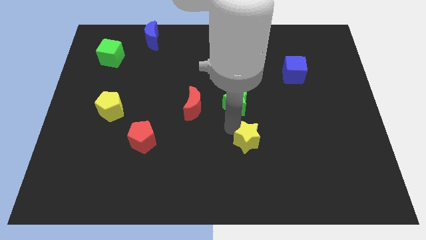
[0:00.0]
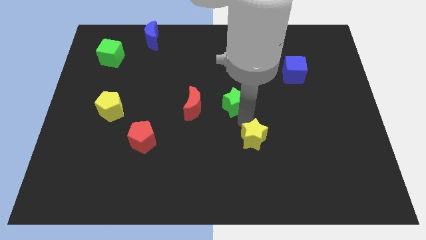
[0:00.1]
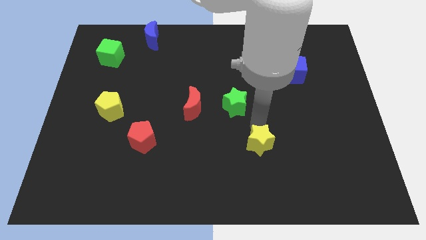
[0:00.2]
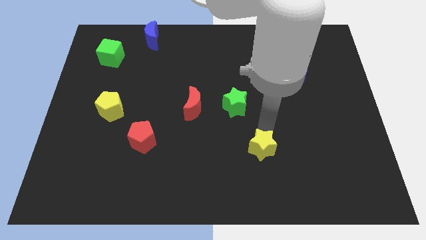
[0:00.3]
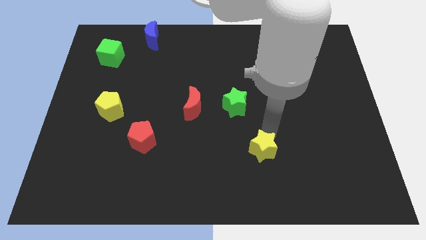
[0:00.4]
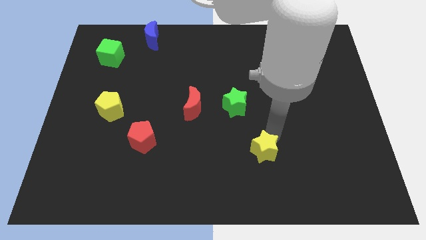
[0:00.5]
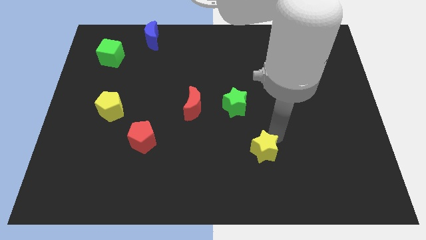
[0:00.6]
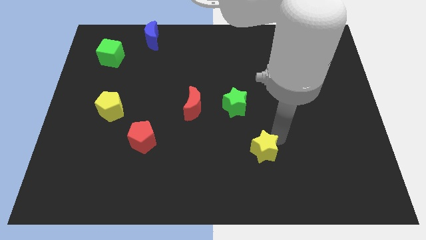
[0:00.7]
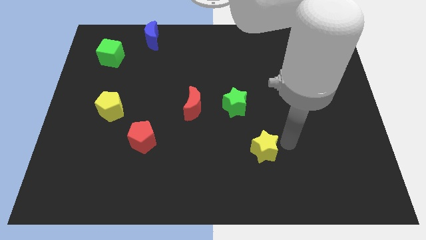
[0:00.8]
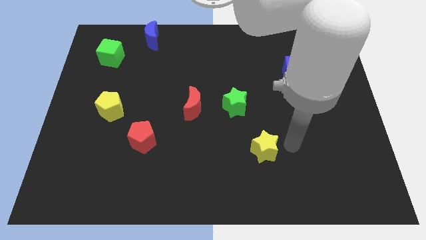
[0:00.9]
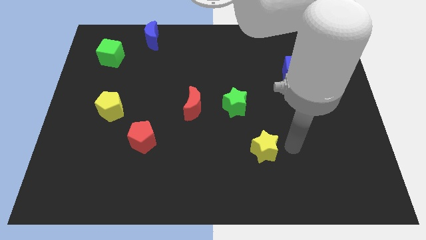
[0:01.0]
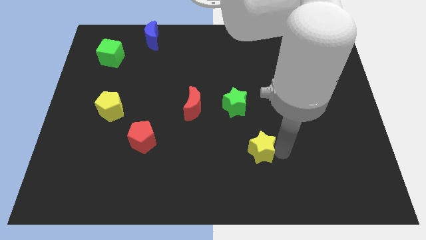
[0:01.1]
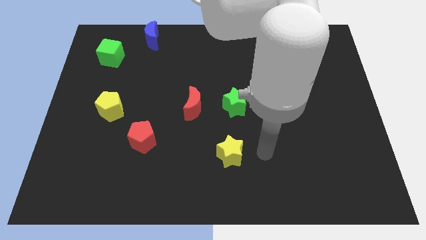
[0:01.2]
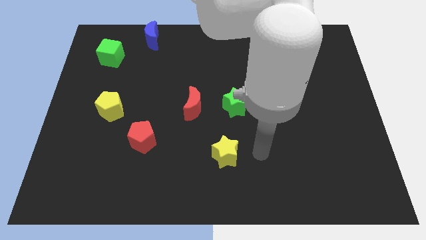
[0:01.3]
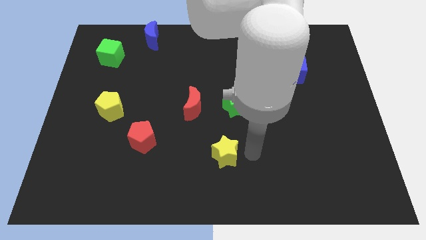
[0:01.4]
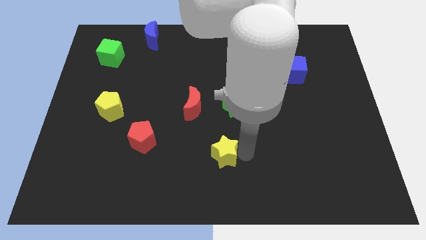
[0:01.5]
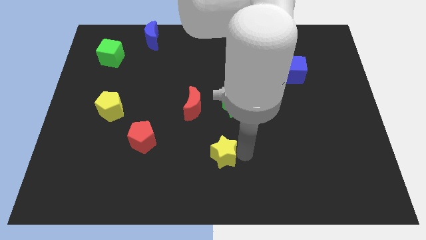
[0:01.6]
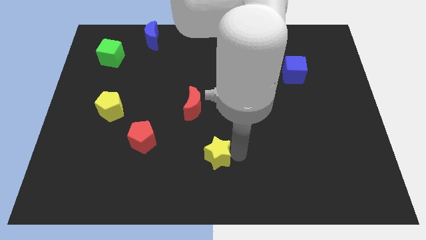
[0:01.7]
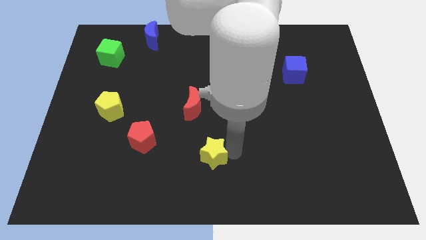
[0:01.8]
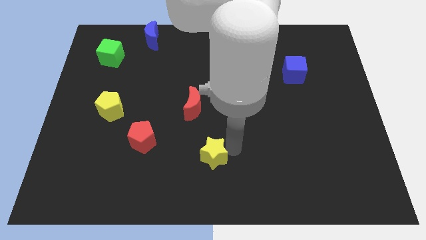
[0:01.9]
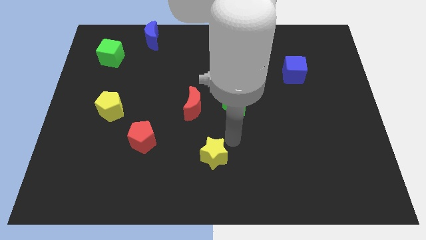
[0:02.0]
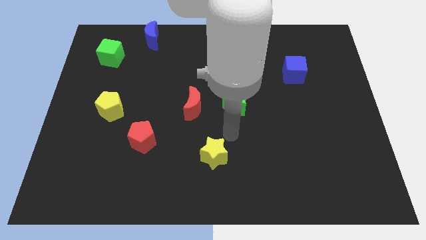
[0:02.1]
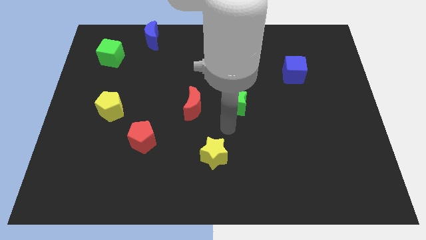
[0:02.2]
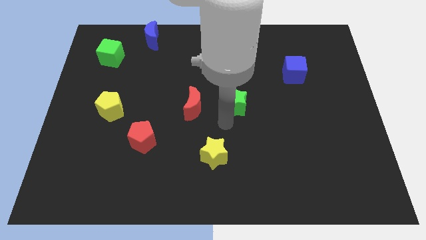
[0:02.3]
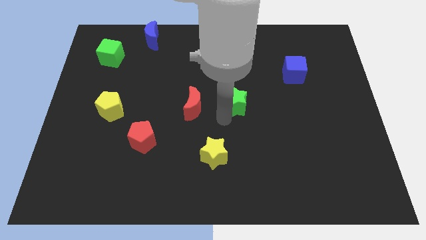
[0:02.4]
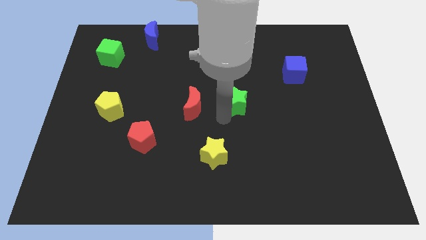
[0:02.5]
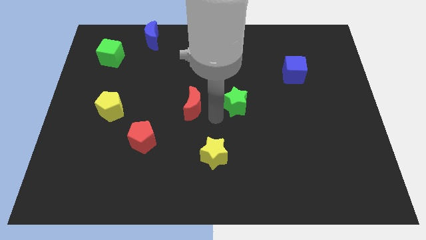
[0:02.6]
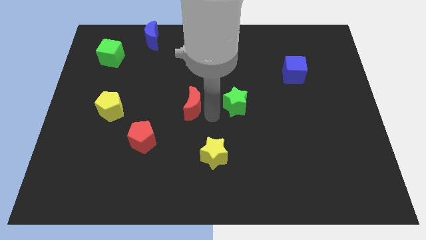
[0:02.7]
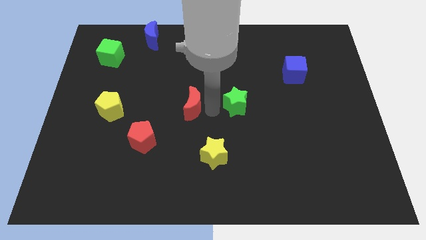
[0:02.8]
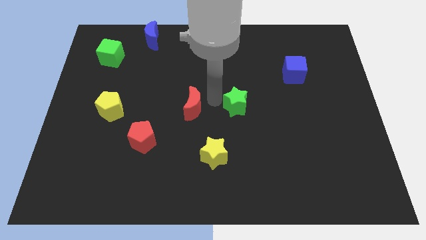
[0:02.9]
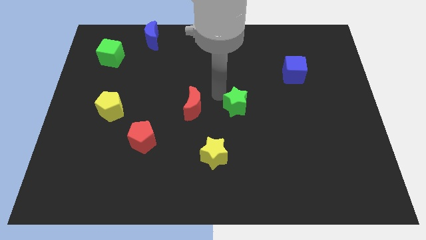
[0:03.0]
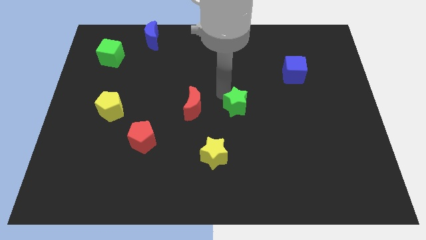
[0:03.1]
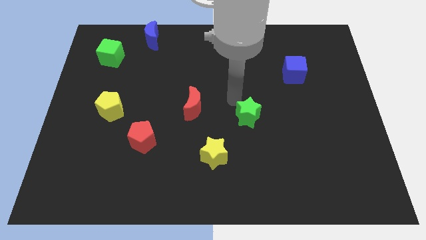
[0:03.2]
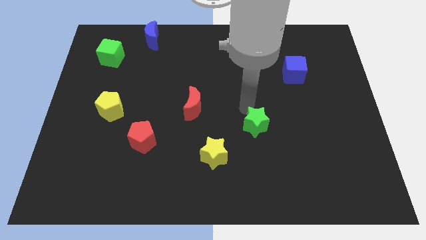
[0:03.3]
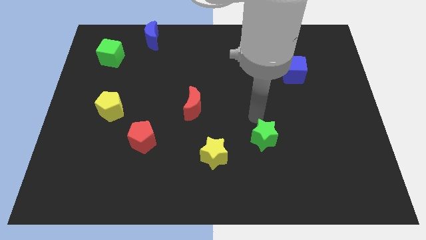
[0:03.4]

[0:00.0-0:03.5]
place the yellow star towards the left to the board

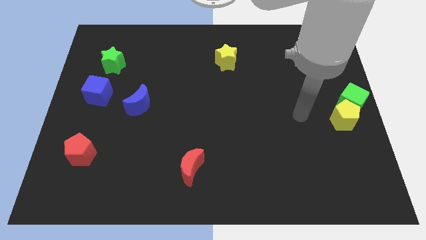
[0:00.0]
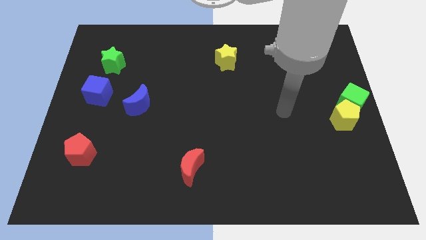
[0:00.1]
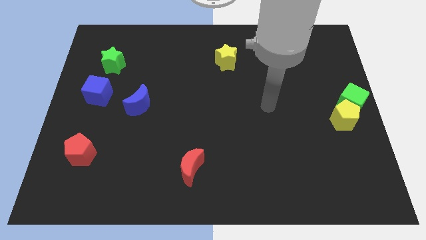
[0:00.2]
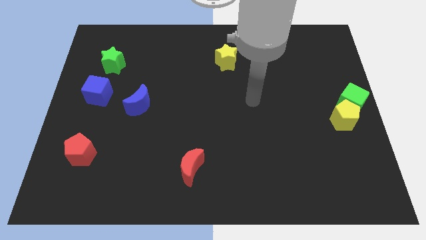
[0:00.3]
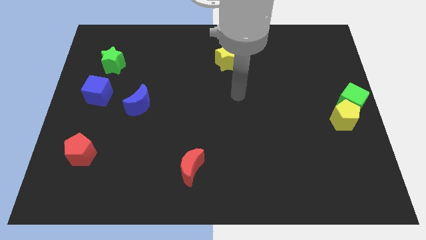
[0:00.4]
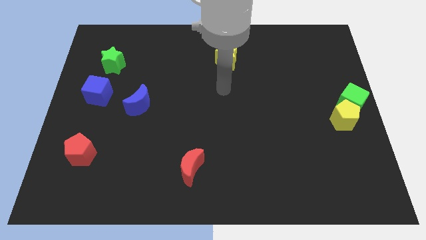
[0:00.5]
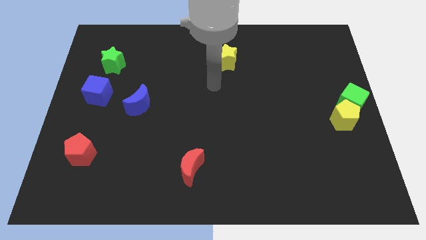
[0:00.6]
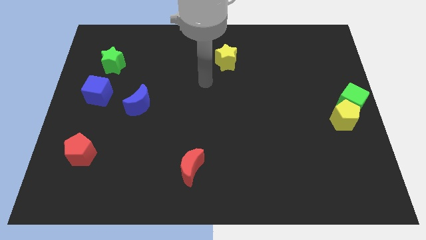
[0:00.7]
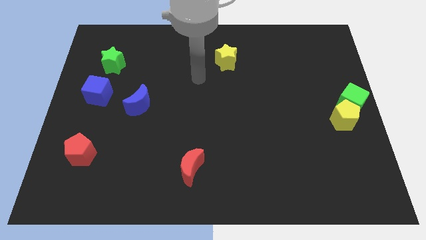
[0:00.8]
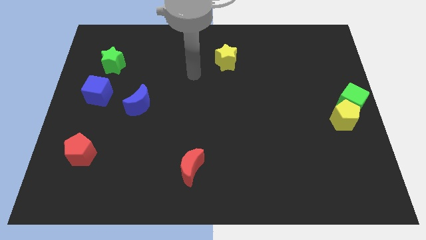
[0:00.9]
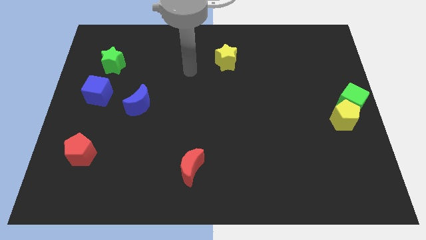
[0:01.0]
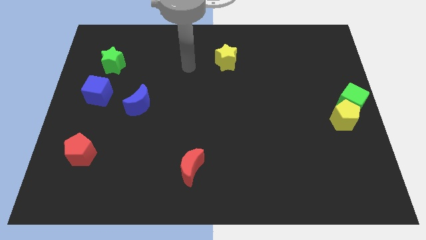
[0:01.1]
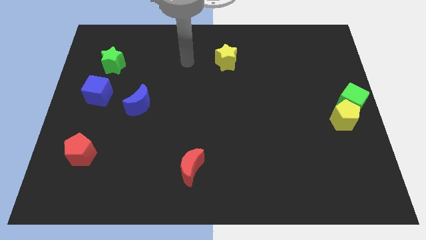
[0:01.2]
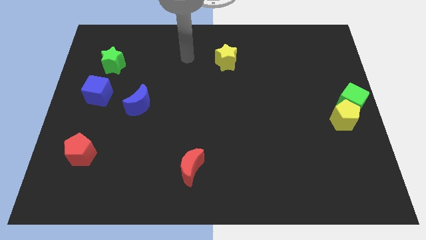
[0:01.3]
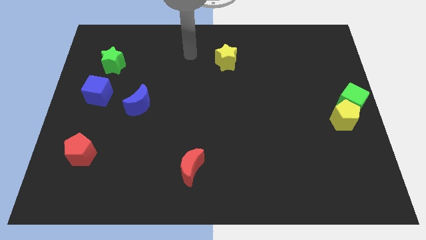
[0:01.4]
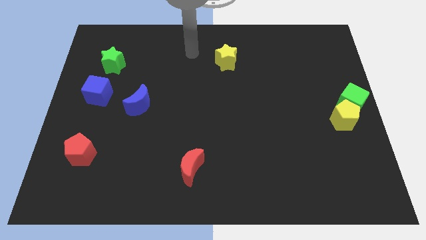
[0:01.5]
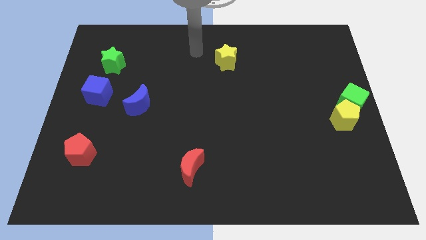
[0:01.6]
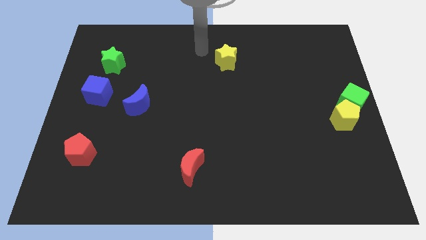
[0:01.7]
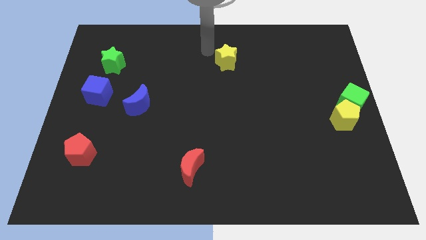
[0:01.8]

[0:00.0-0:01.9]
move your arm on top of the yellow star

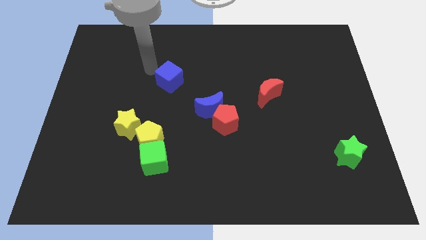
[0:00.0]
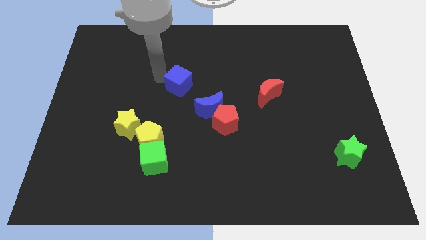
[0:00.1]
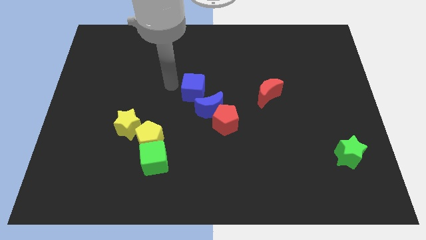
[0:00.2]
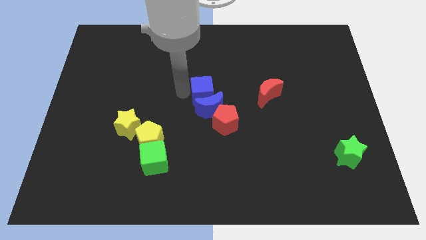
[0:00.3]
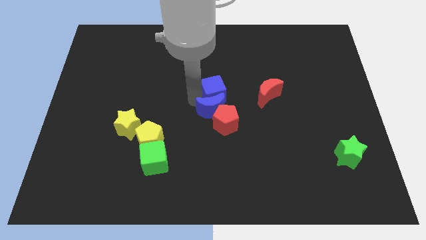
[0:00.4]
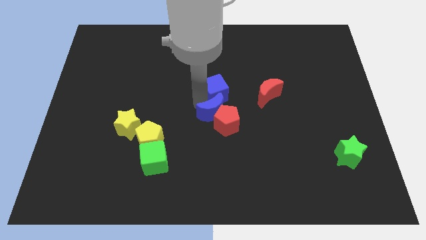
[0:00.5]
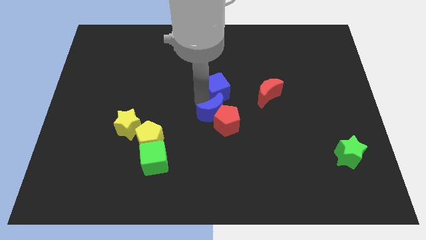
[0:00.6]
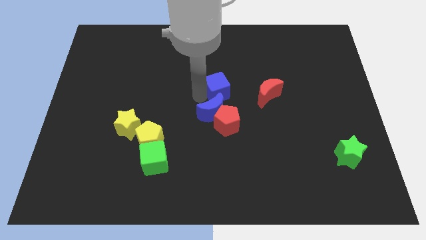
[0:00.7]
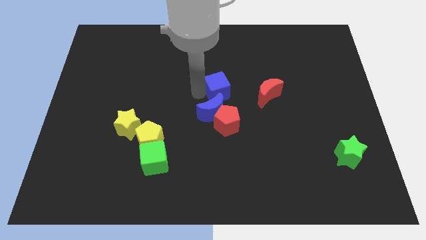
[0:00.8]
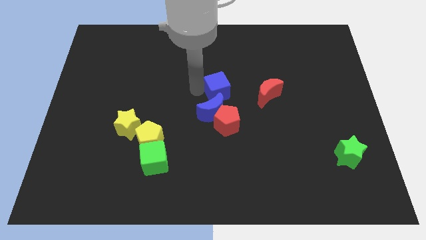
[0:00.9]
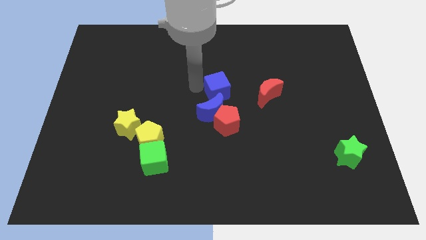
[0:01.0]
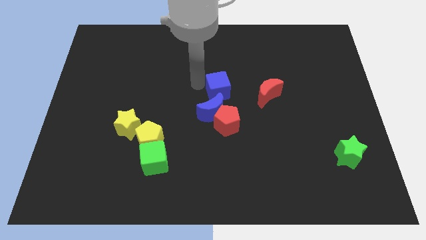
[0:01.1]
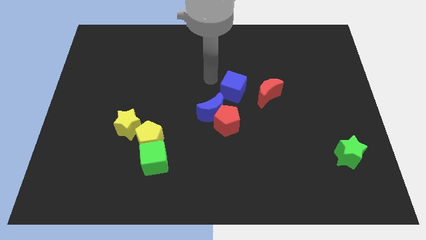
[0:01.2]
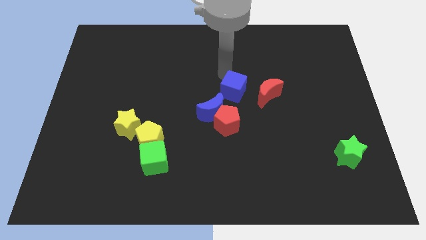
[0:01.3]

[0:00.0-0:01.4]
push the blue cube into the blue crescent

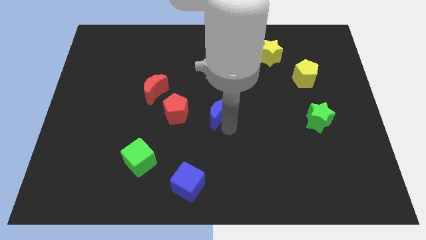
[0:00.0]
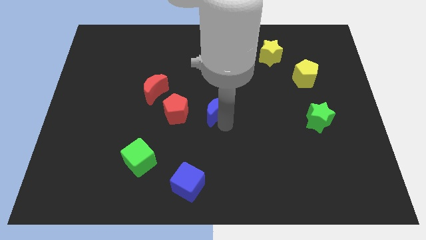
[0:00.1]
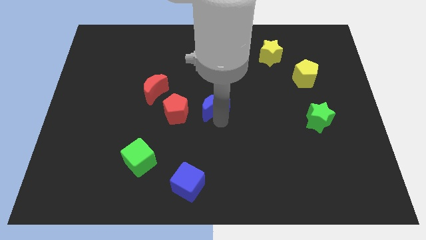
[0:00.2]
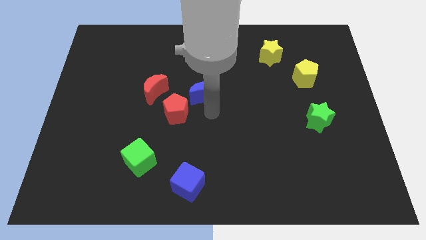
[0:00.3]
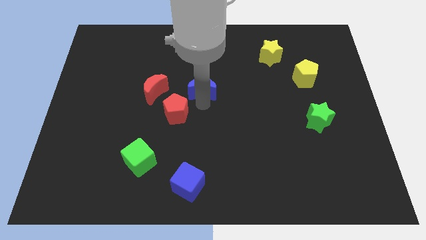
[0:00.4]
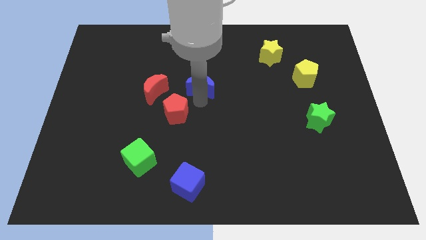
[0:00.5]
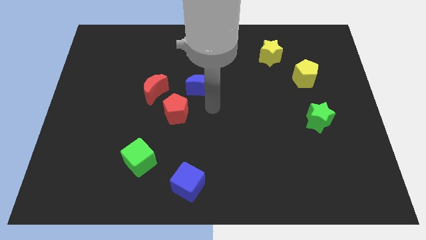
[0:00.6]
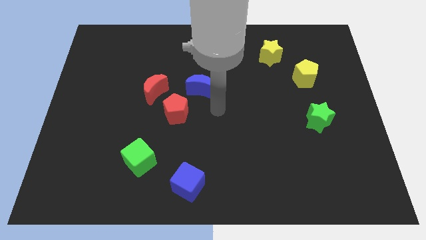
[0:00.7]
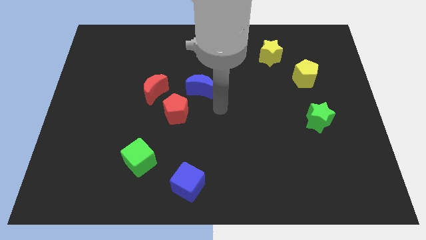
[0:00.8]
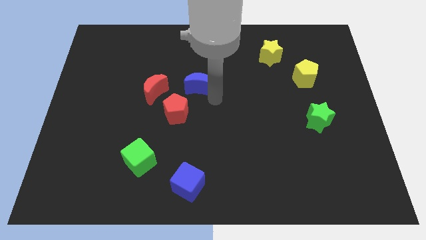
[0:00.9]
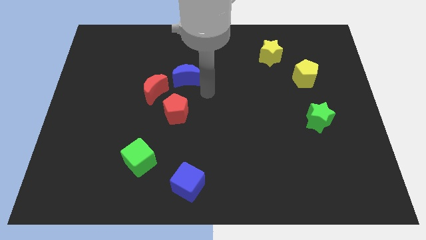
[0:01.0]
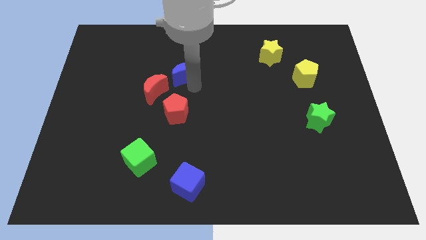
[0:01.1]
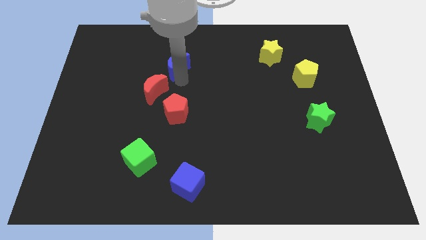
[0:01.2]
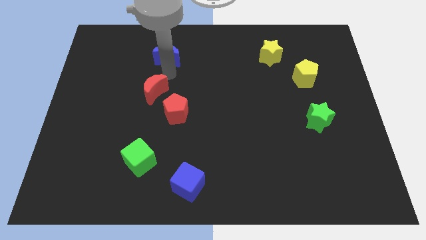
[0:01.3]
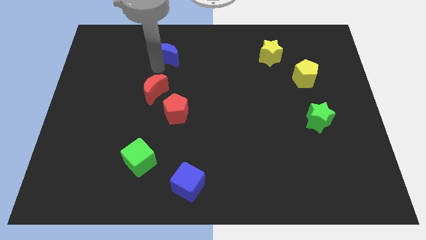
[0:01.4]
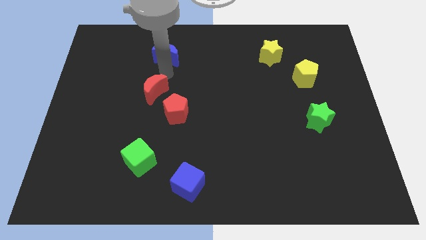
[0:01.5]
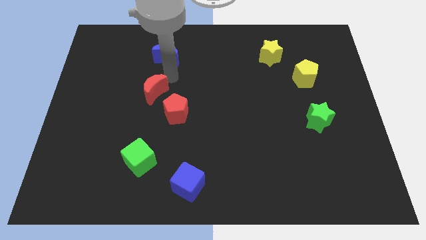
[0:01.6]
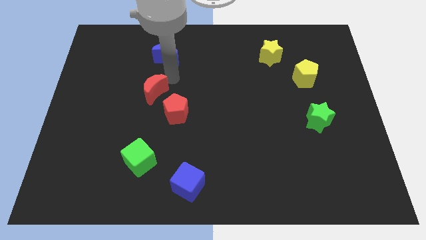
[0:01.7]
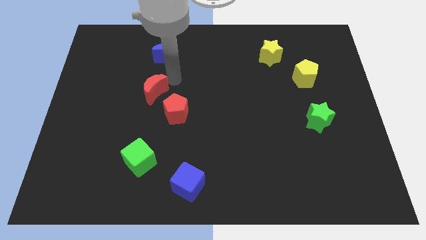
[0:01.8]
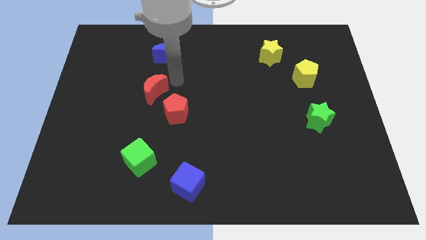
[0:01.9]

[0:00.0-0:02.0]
place blue moon vertical to red moon

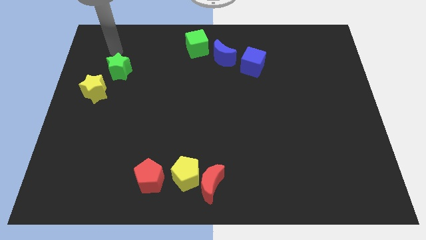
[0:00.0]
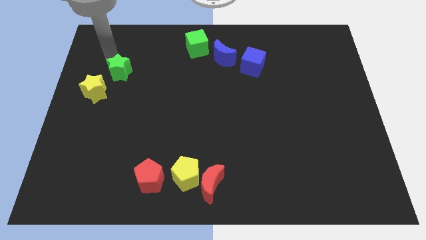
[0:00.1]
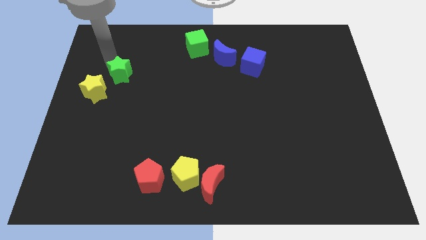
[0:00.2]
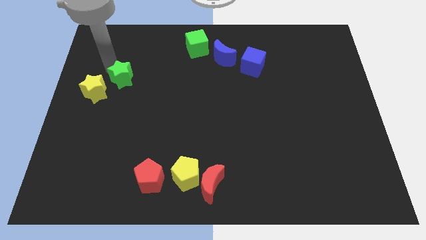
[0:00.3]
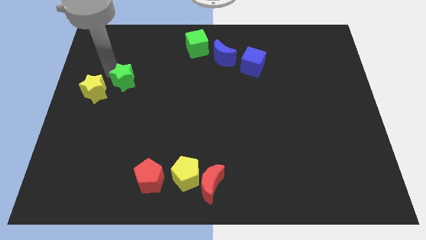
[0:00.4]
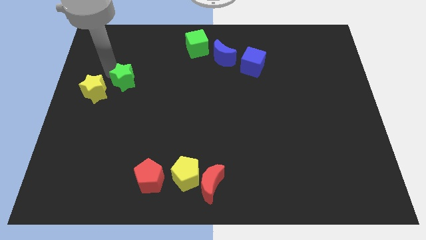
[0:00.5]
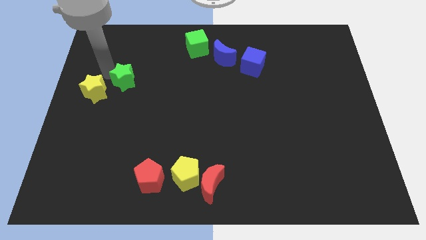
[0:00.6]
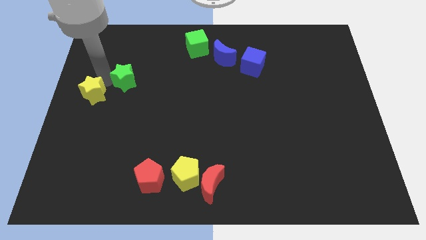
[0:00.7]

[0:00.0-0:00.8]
push the green star diagonally to the top right corner of the yellow star
